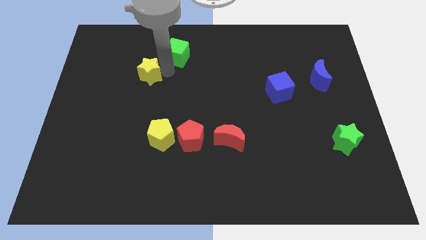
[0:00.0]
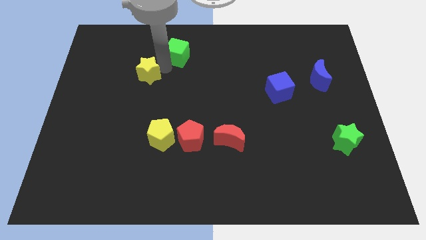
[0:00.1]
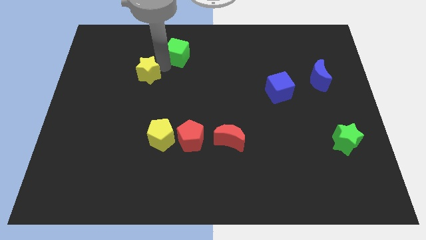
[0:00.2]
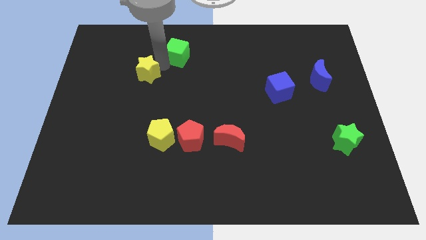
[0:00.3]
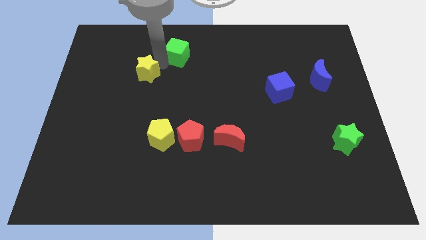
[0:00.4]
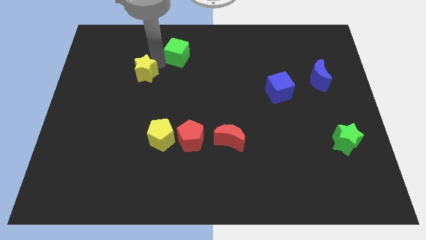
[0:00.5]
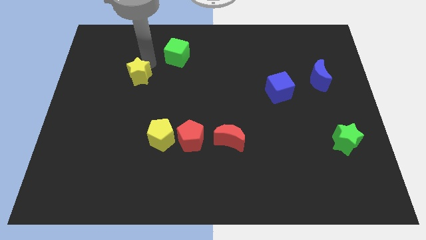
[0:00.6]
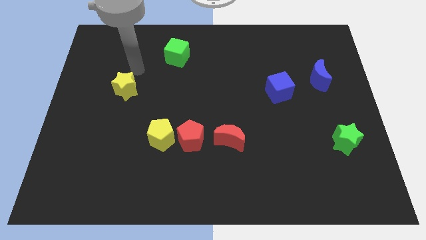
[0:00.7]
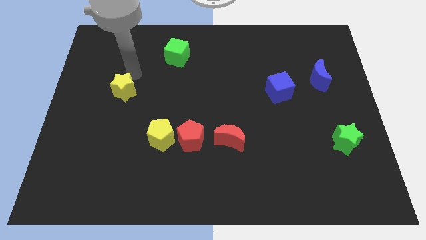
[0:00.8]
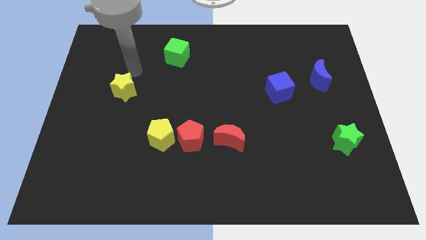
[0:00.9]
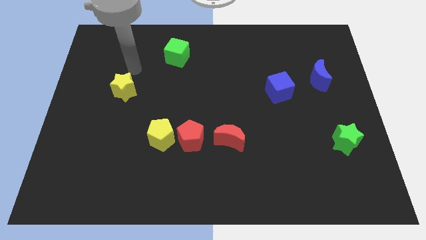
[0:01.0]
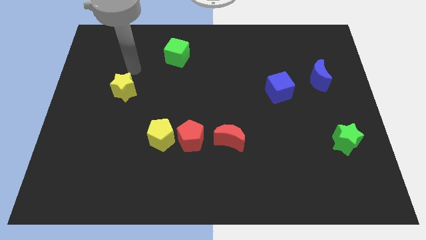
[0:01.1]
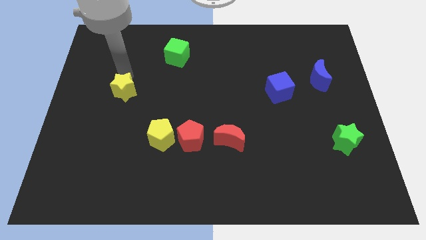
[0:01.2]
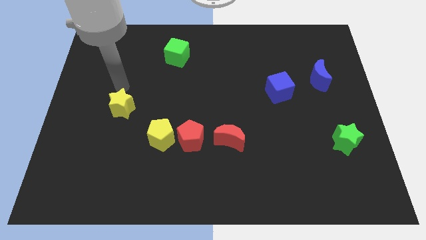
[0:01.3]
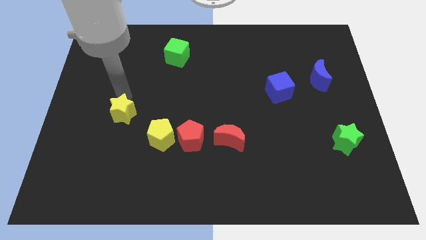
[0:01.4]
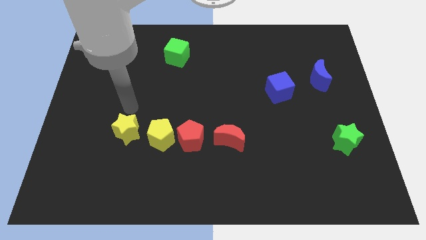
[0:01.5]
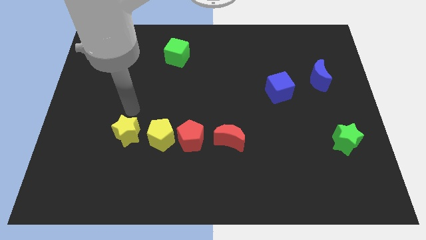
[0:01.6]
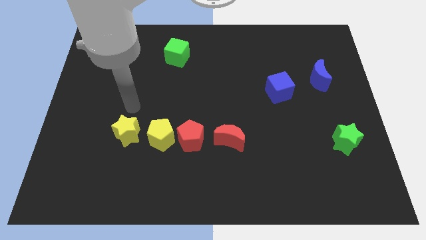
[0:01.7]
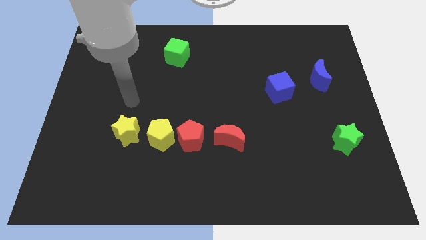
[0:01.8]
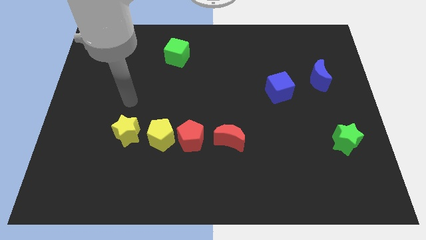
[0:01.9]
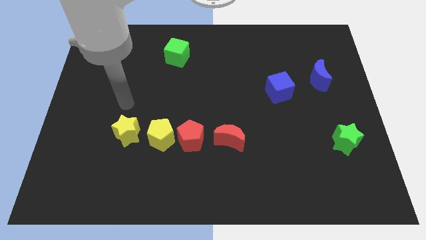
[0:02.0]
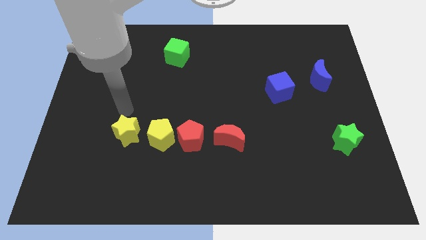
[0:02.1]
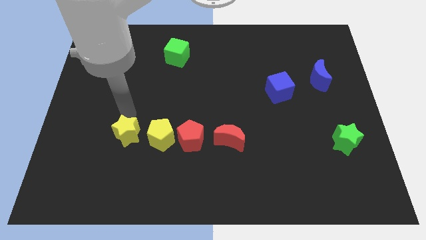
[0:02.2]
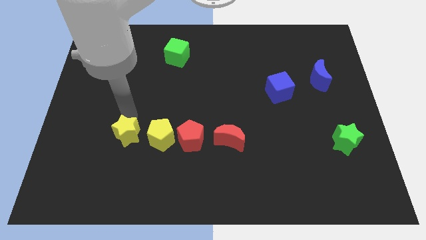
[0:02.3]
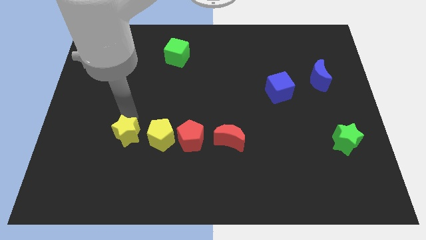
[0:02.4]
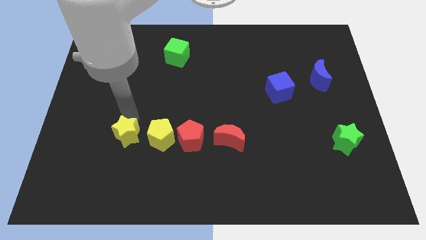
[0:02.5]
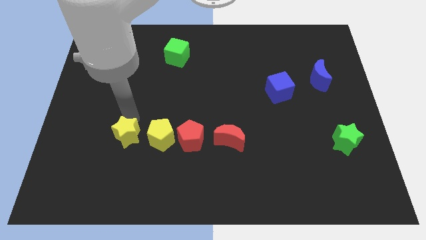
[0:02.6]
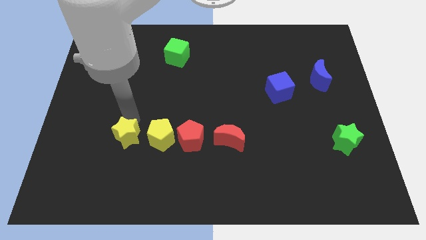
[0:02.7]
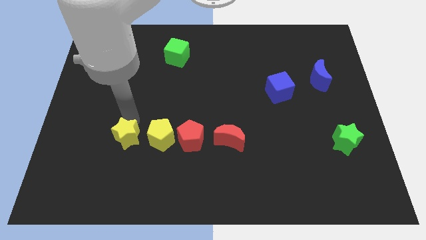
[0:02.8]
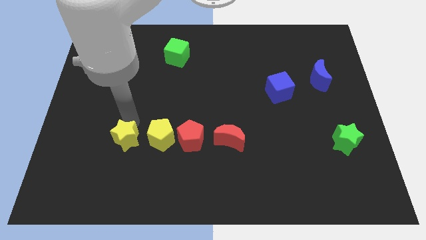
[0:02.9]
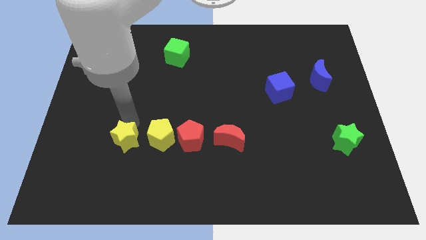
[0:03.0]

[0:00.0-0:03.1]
slide the yellow star towards the left side of the yellow pentagon

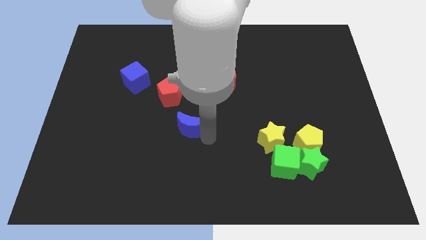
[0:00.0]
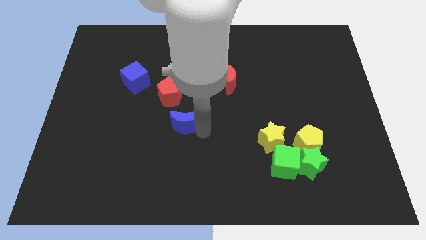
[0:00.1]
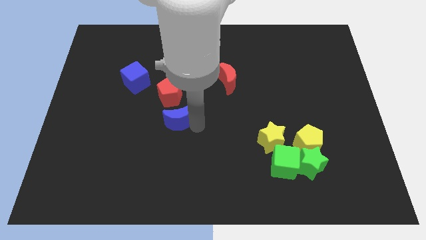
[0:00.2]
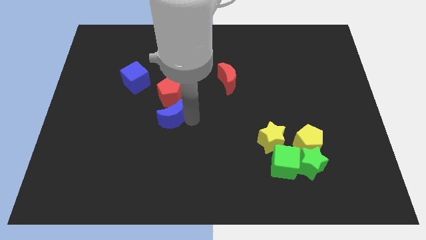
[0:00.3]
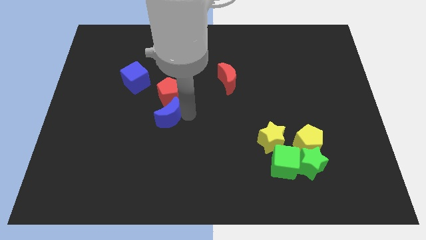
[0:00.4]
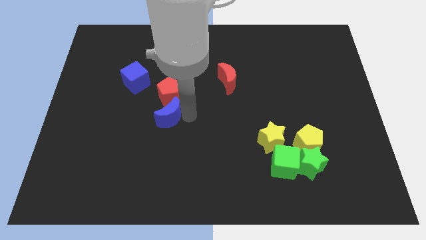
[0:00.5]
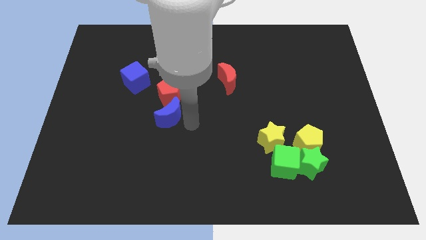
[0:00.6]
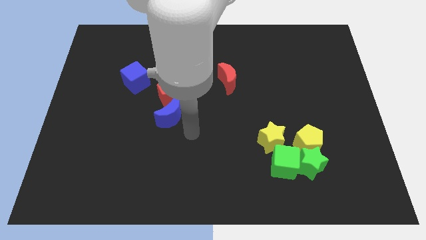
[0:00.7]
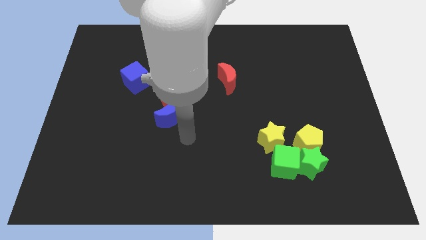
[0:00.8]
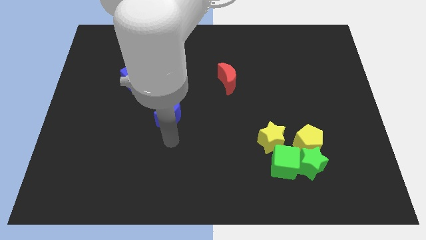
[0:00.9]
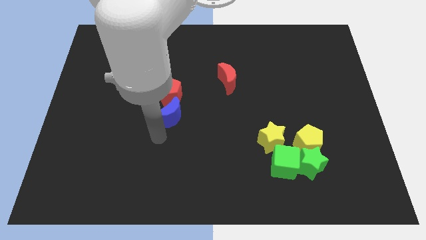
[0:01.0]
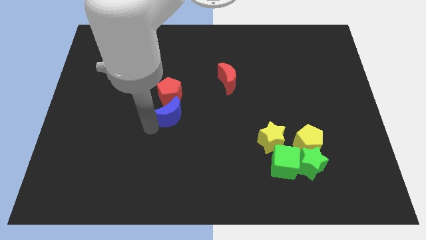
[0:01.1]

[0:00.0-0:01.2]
place the blue crescent below the red pentagon

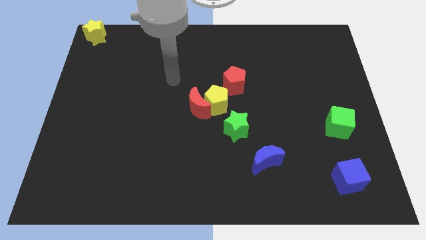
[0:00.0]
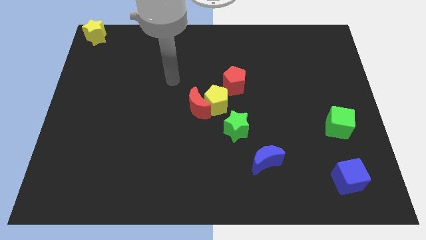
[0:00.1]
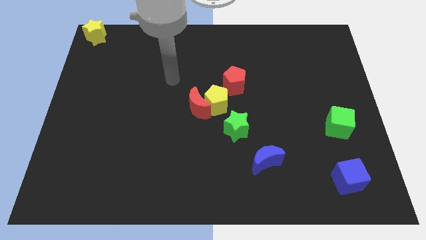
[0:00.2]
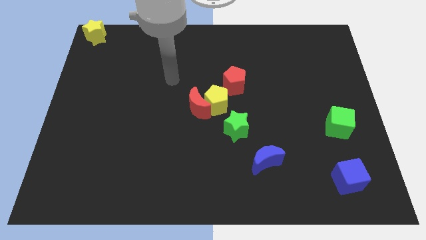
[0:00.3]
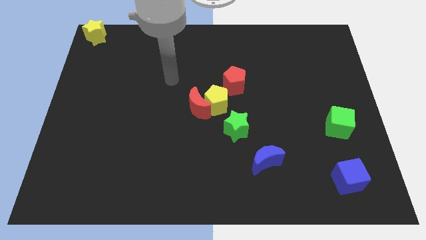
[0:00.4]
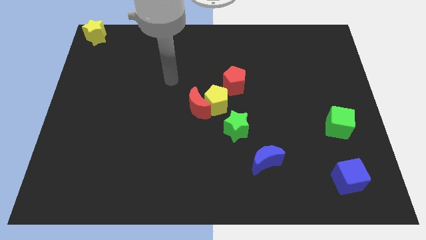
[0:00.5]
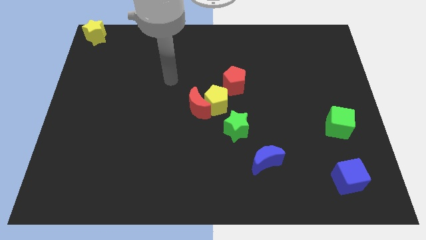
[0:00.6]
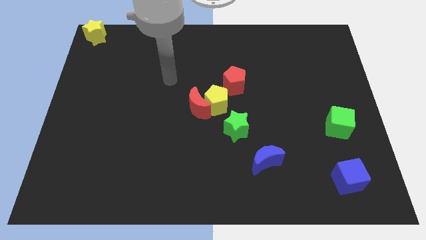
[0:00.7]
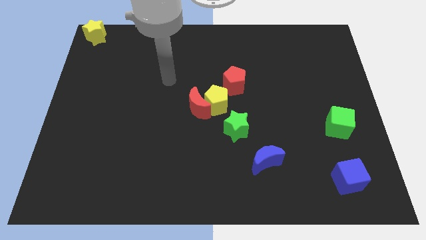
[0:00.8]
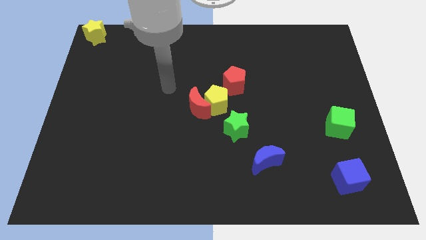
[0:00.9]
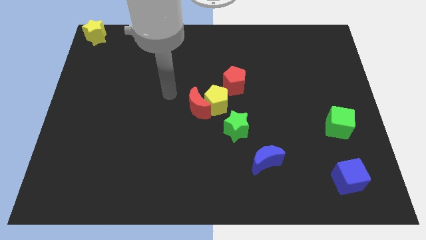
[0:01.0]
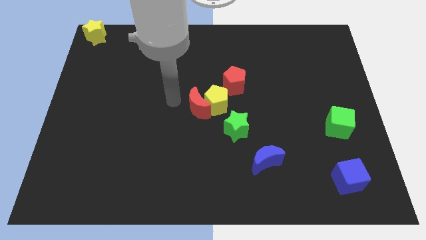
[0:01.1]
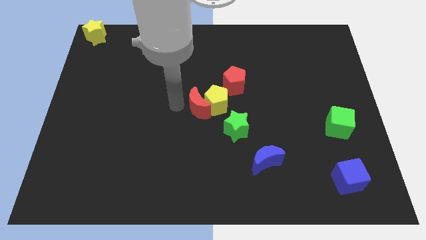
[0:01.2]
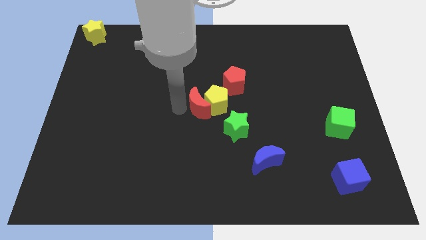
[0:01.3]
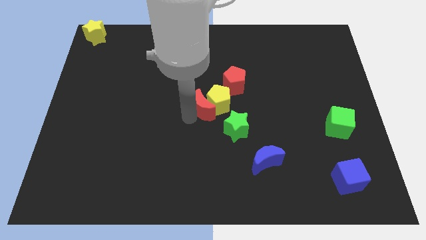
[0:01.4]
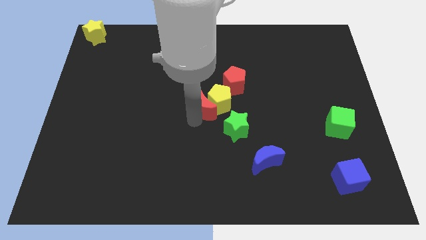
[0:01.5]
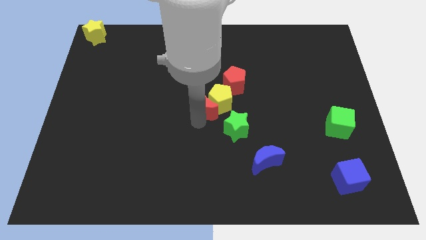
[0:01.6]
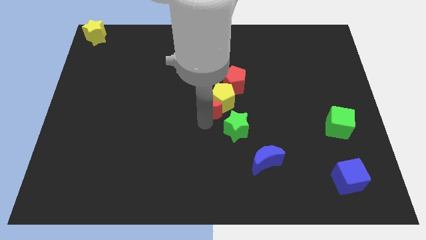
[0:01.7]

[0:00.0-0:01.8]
tap the bottom left side of the red crescent

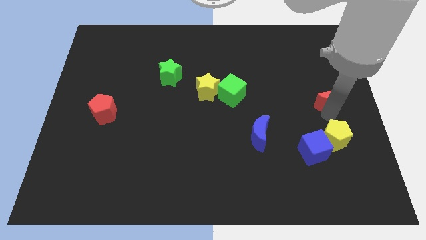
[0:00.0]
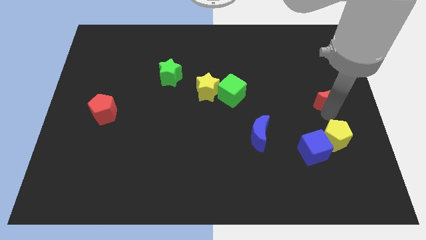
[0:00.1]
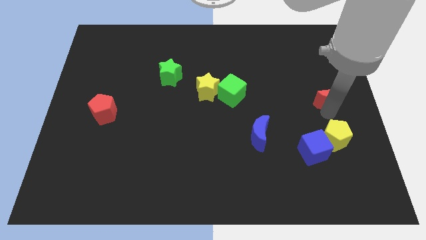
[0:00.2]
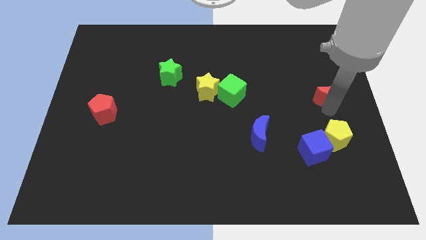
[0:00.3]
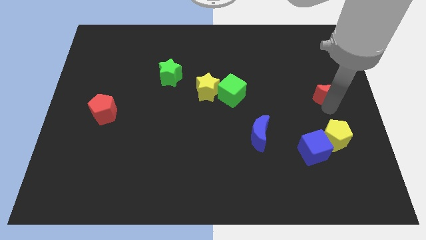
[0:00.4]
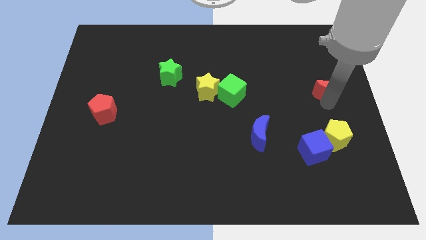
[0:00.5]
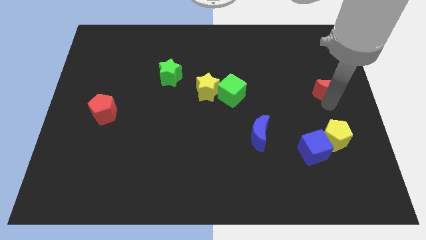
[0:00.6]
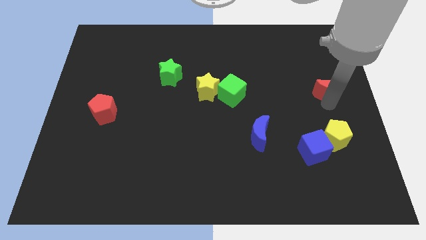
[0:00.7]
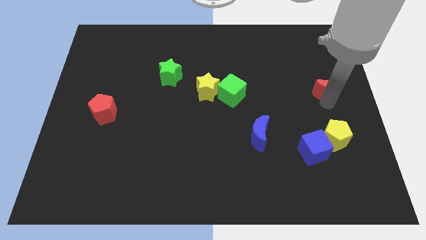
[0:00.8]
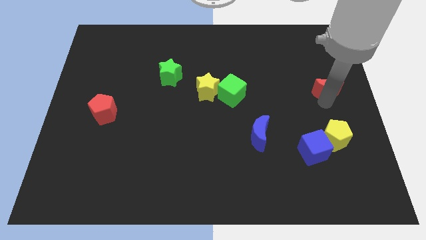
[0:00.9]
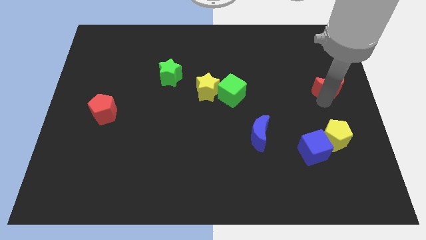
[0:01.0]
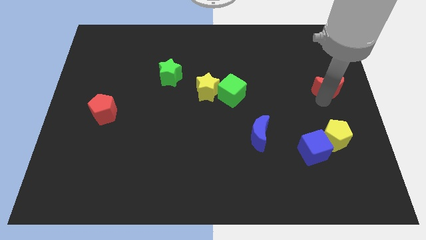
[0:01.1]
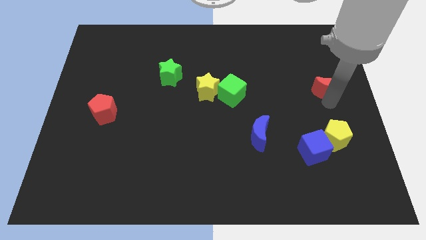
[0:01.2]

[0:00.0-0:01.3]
push the red crescent horizontally to the right side of the green cube

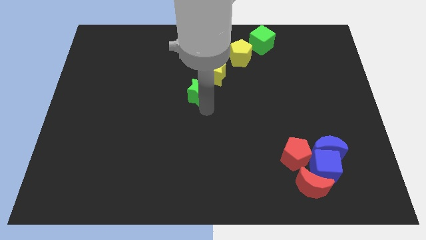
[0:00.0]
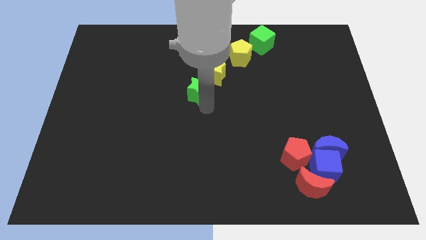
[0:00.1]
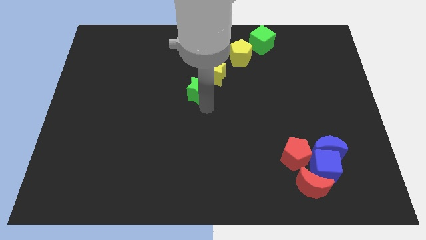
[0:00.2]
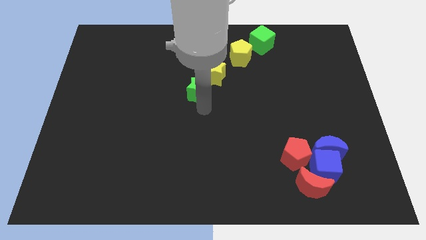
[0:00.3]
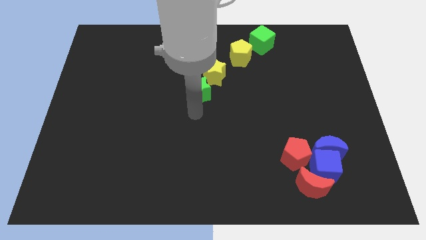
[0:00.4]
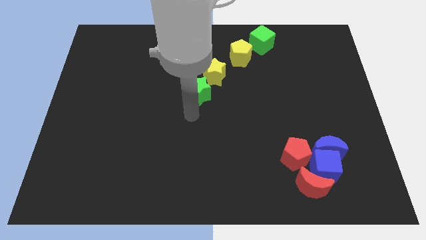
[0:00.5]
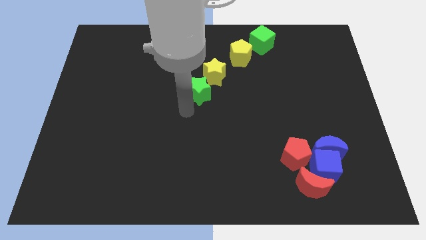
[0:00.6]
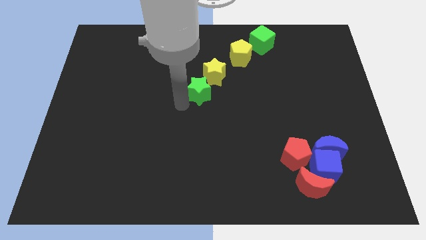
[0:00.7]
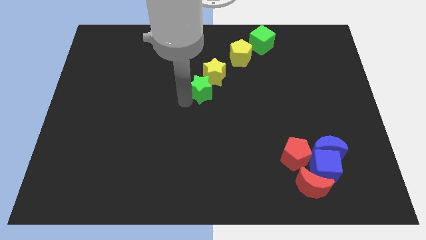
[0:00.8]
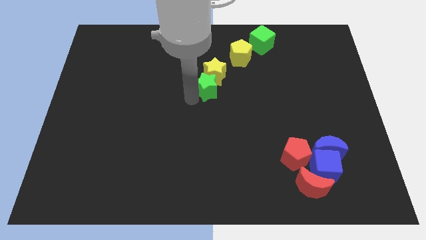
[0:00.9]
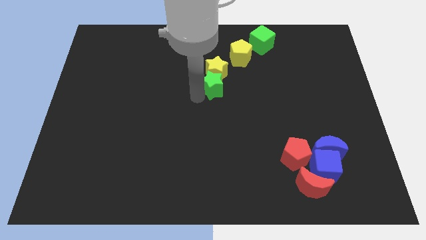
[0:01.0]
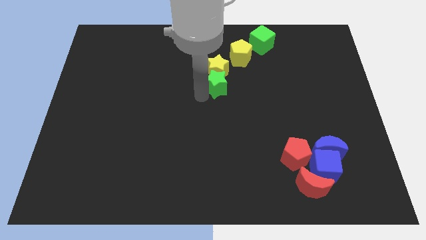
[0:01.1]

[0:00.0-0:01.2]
push the green star into the yellow star

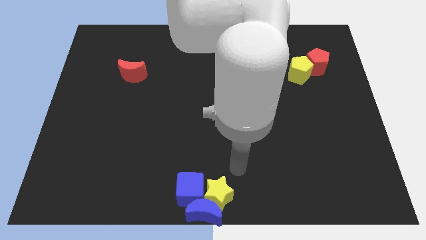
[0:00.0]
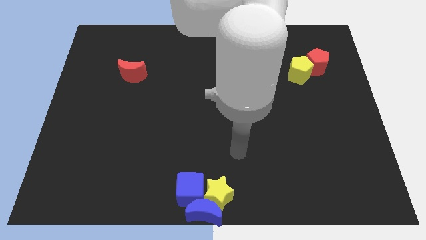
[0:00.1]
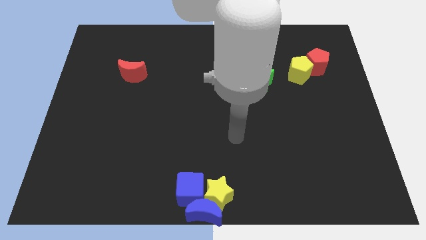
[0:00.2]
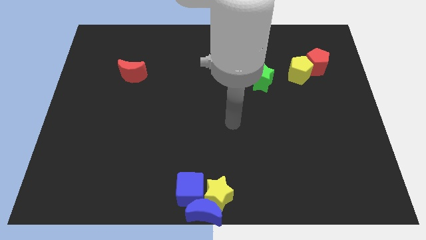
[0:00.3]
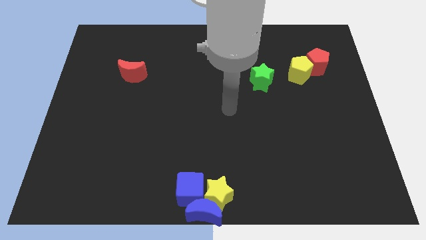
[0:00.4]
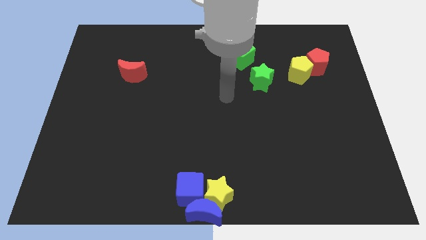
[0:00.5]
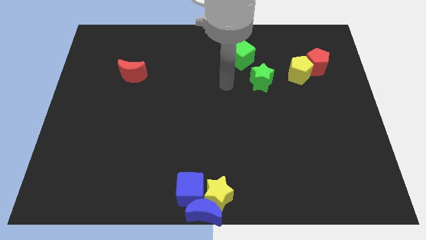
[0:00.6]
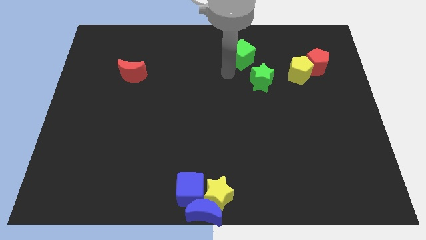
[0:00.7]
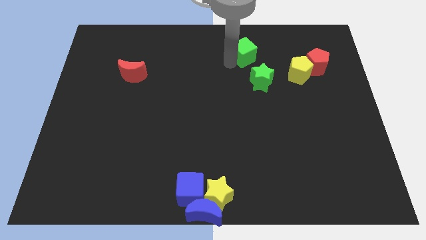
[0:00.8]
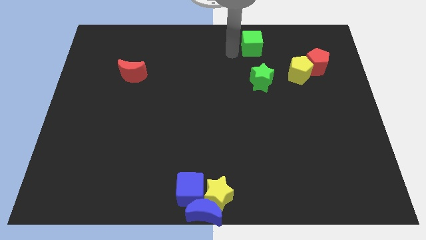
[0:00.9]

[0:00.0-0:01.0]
tap the green cube
